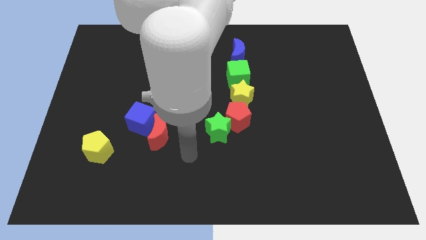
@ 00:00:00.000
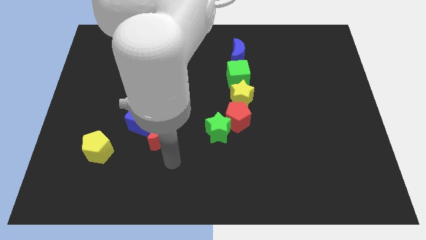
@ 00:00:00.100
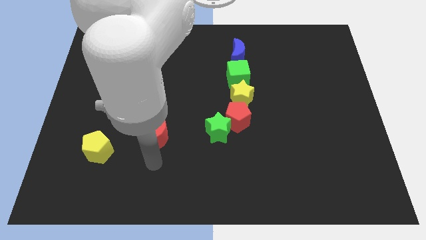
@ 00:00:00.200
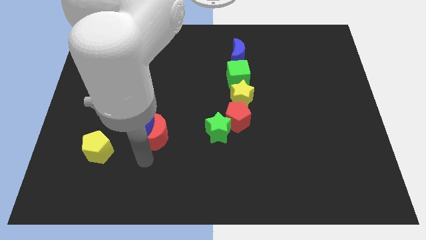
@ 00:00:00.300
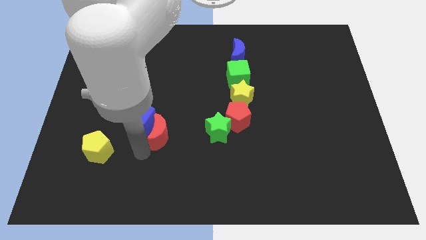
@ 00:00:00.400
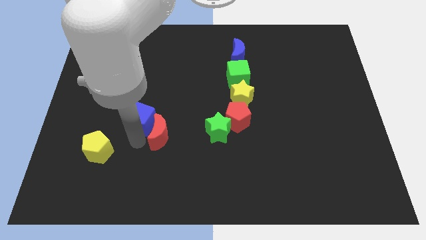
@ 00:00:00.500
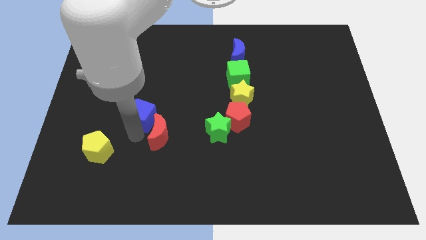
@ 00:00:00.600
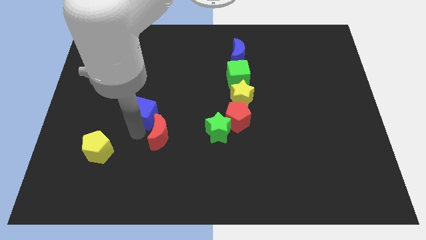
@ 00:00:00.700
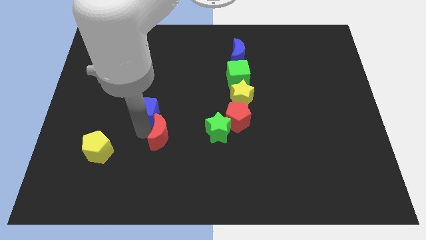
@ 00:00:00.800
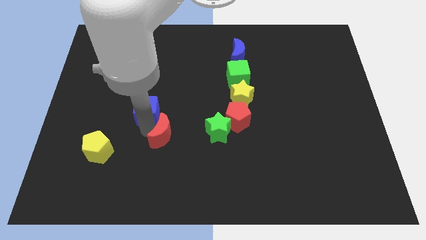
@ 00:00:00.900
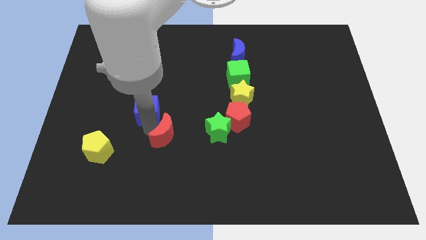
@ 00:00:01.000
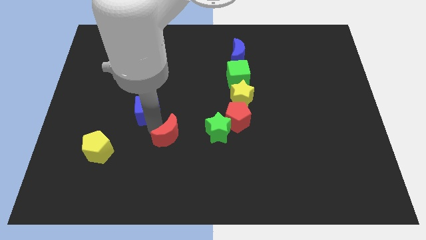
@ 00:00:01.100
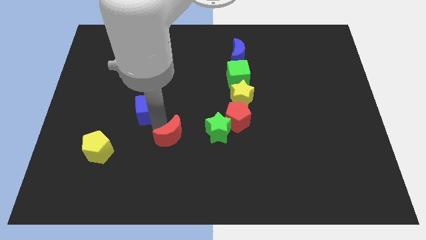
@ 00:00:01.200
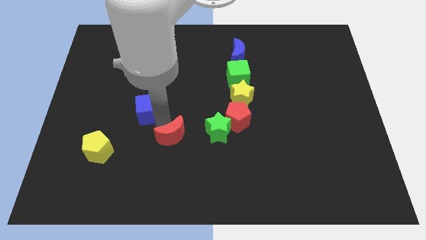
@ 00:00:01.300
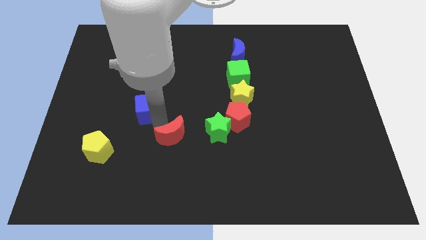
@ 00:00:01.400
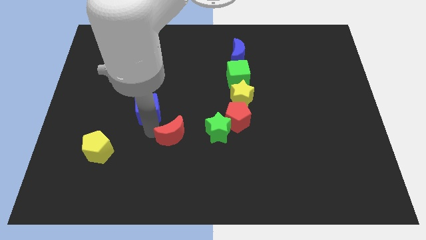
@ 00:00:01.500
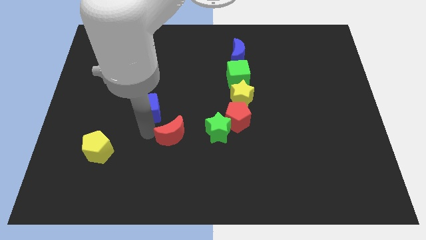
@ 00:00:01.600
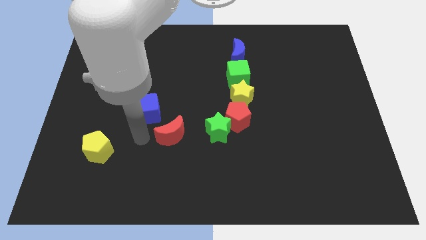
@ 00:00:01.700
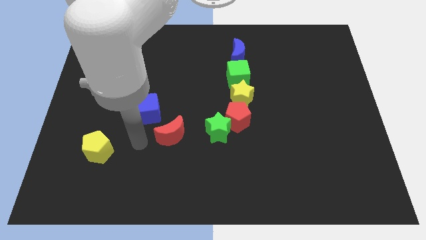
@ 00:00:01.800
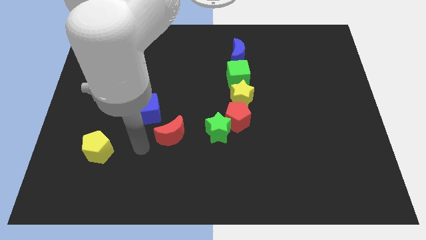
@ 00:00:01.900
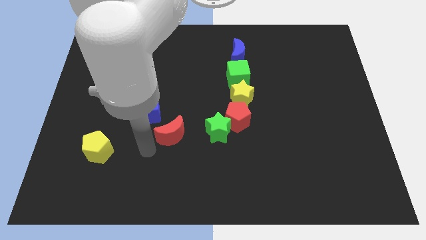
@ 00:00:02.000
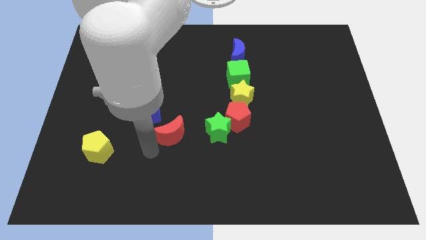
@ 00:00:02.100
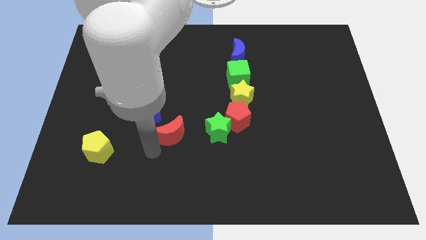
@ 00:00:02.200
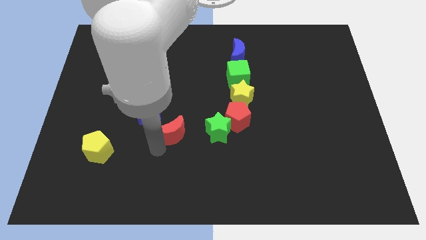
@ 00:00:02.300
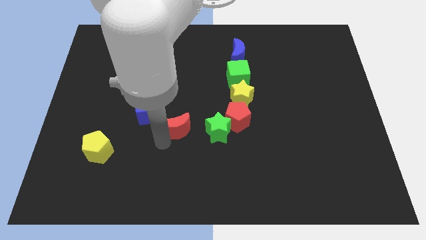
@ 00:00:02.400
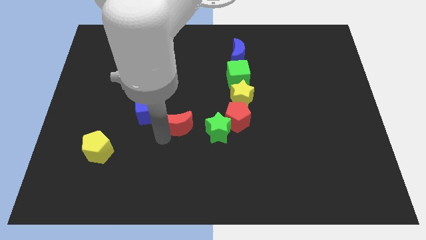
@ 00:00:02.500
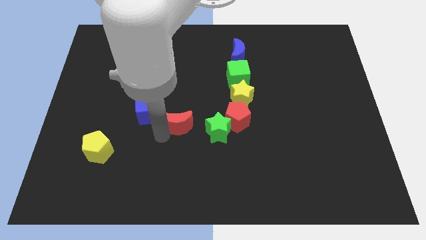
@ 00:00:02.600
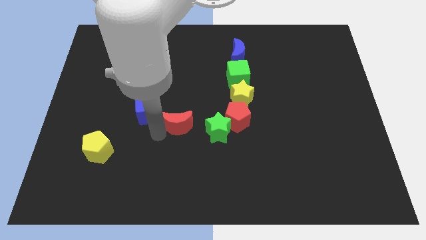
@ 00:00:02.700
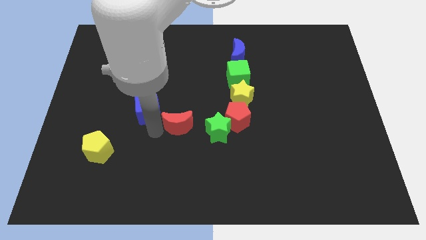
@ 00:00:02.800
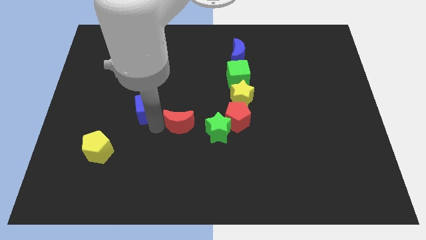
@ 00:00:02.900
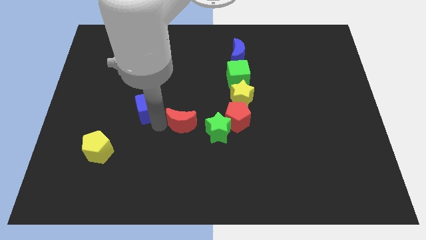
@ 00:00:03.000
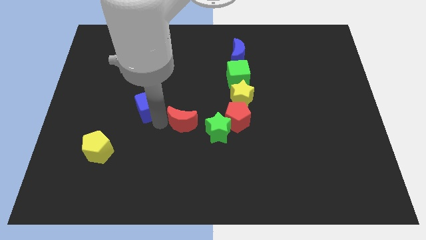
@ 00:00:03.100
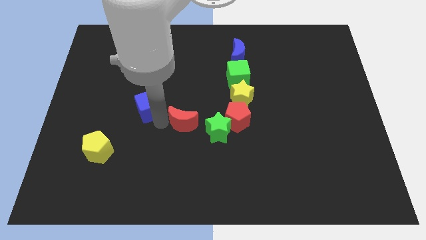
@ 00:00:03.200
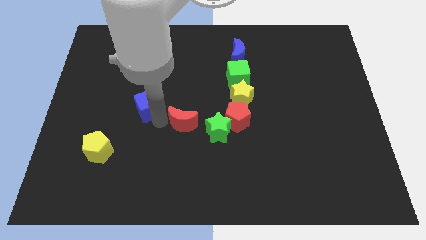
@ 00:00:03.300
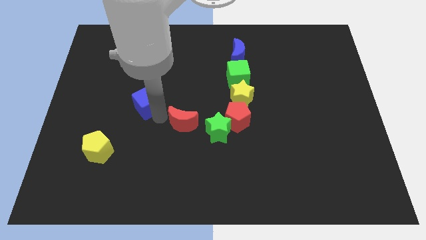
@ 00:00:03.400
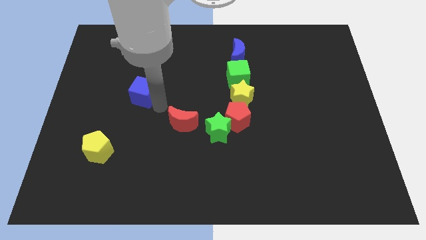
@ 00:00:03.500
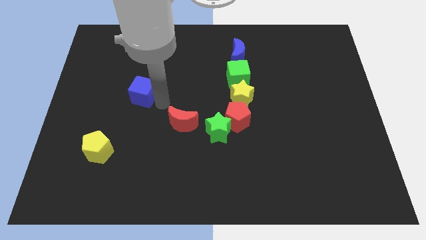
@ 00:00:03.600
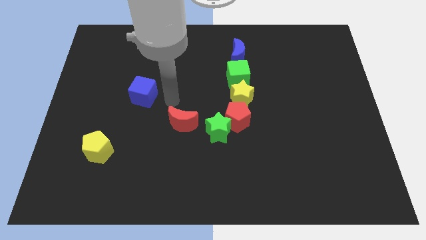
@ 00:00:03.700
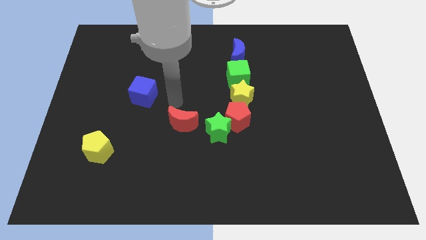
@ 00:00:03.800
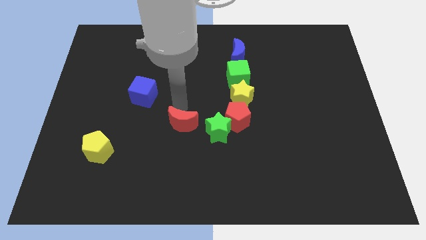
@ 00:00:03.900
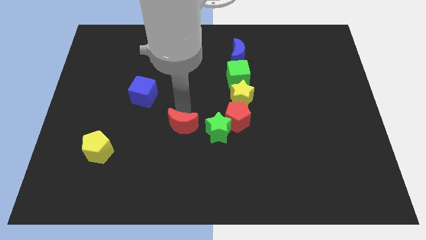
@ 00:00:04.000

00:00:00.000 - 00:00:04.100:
separate the blue cube and red moon

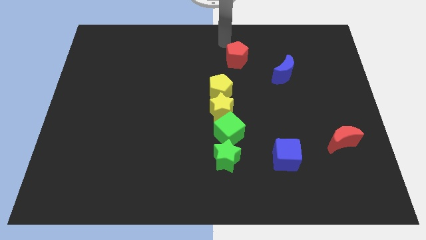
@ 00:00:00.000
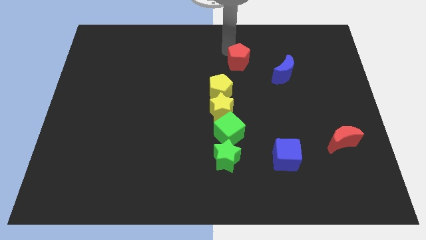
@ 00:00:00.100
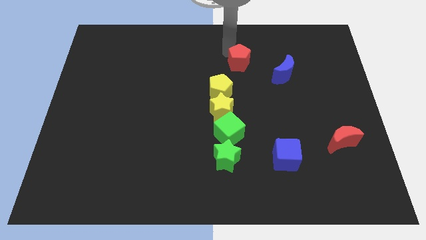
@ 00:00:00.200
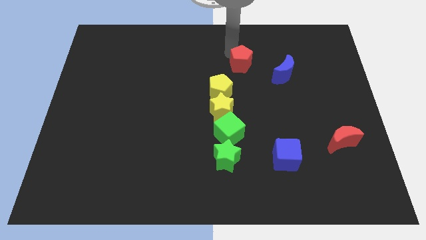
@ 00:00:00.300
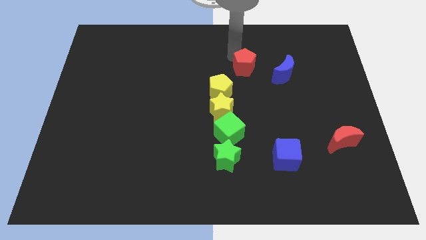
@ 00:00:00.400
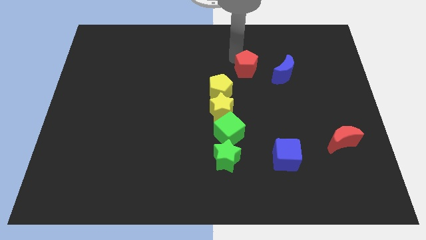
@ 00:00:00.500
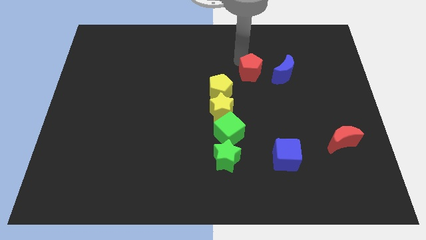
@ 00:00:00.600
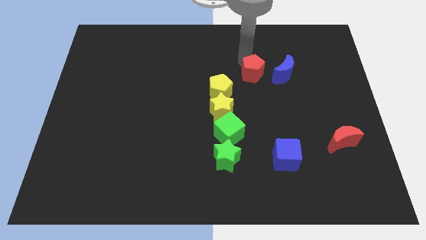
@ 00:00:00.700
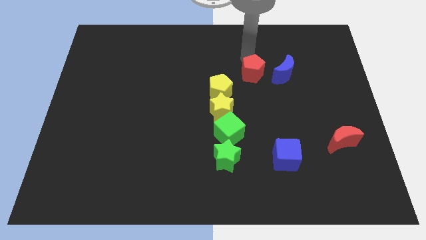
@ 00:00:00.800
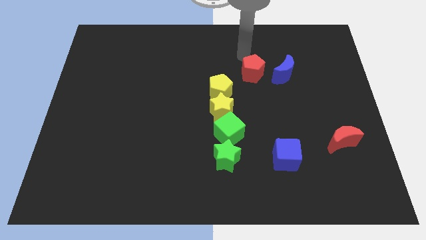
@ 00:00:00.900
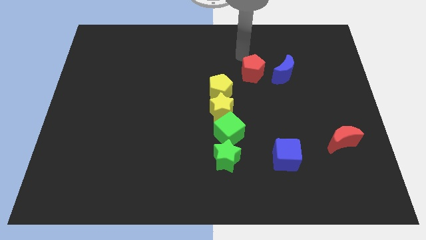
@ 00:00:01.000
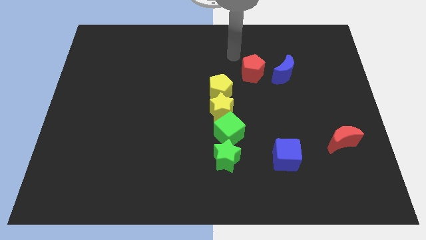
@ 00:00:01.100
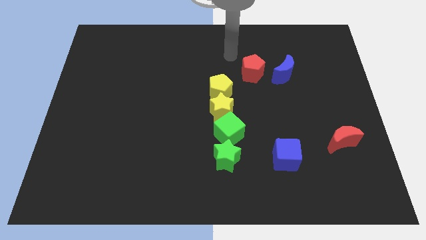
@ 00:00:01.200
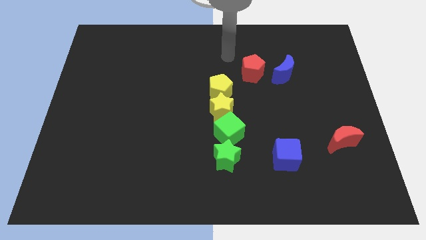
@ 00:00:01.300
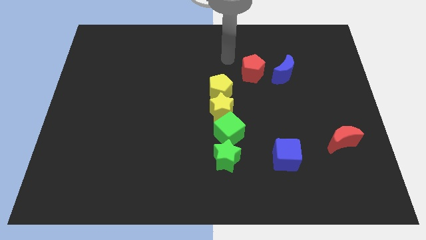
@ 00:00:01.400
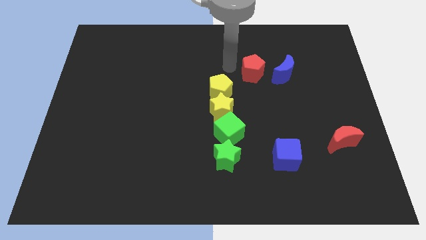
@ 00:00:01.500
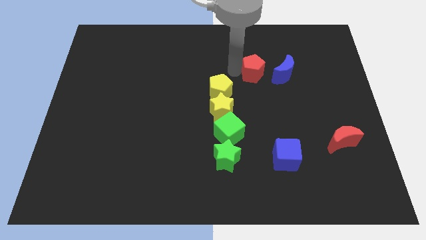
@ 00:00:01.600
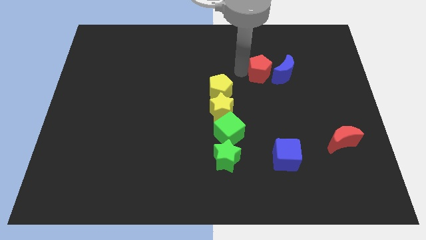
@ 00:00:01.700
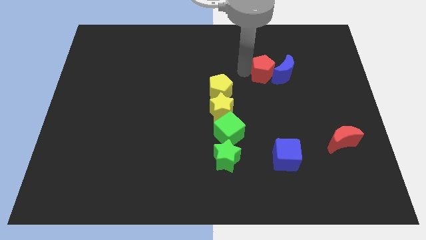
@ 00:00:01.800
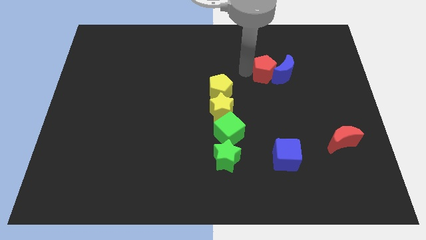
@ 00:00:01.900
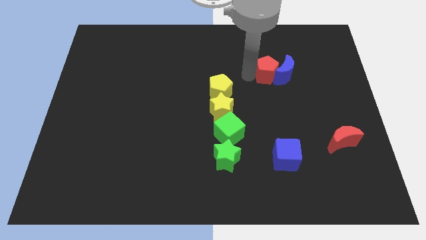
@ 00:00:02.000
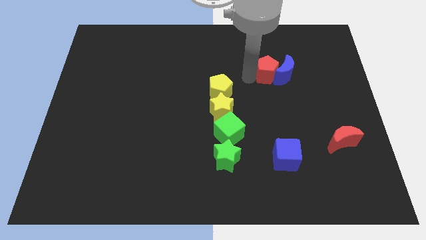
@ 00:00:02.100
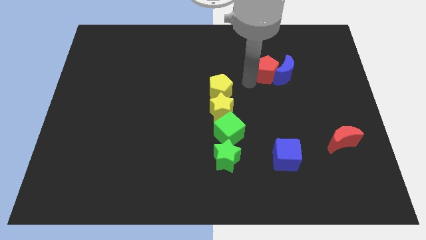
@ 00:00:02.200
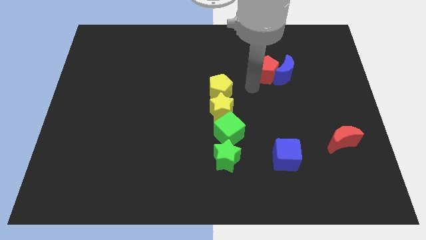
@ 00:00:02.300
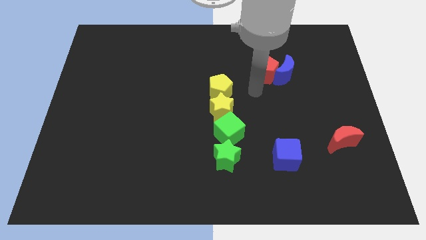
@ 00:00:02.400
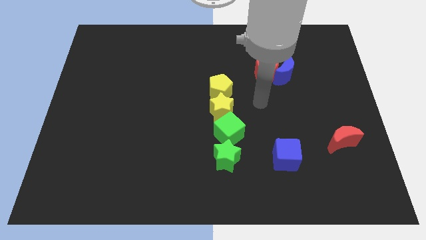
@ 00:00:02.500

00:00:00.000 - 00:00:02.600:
place the red pentagon left to the blue crescent

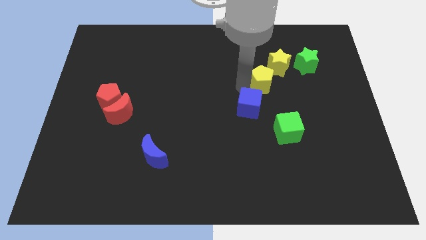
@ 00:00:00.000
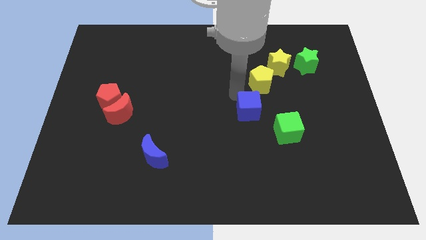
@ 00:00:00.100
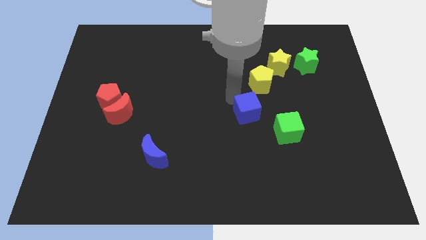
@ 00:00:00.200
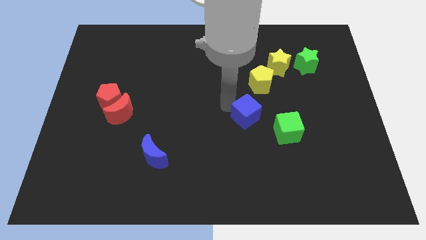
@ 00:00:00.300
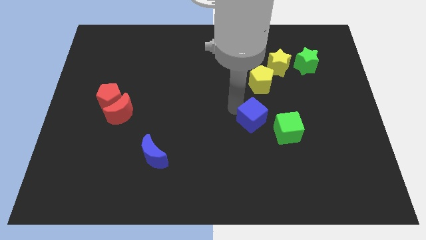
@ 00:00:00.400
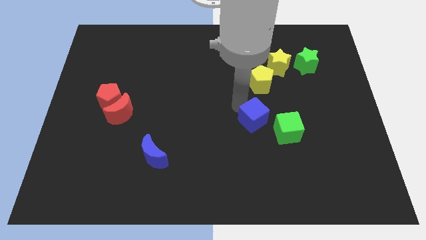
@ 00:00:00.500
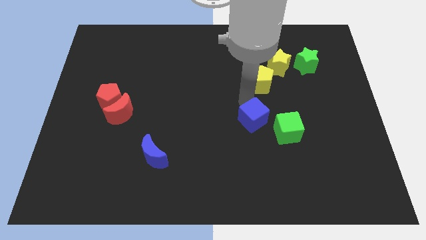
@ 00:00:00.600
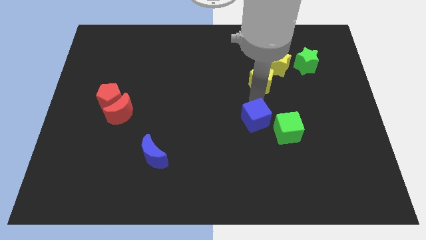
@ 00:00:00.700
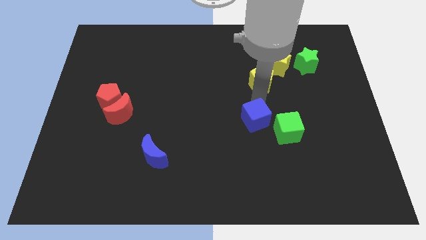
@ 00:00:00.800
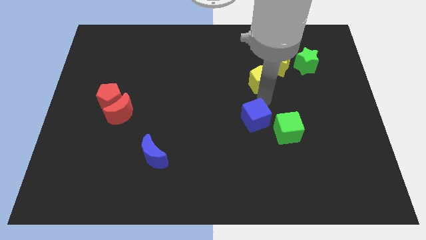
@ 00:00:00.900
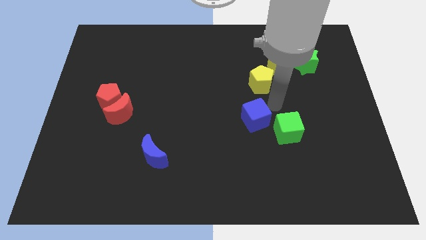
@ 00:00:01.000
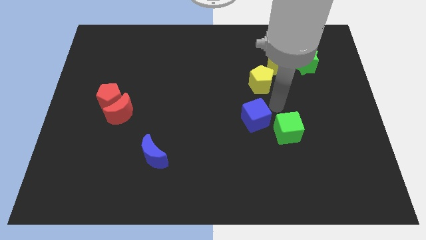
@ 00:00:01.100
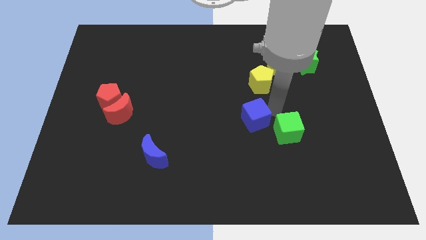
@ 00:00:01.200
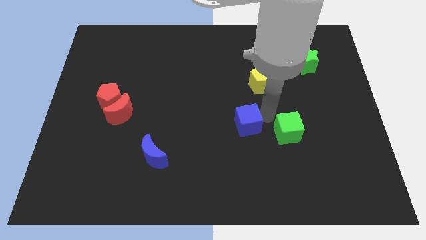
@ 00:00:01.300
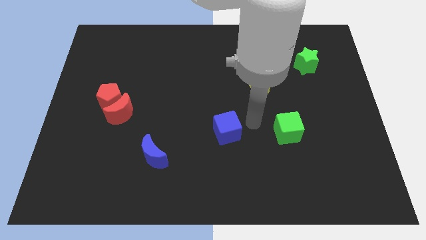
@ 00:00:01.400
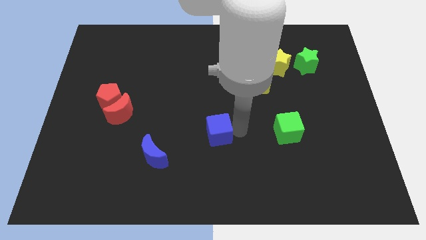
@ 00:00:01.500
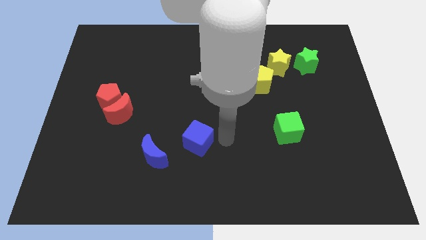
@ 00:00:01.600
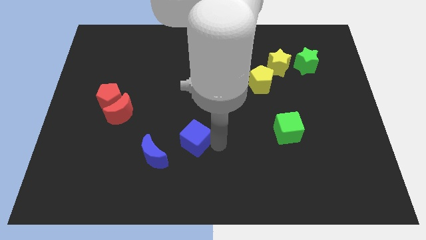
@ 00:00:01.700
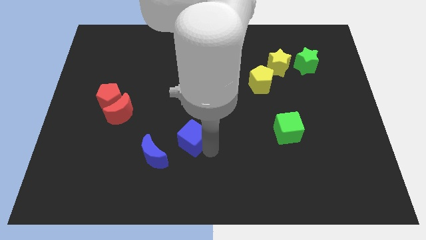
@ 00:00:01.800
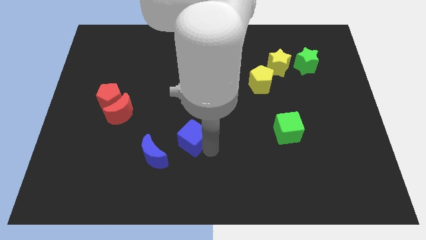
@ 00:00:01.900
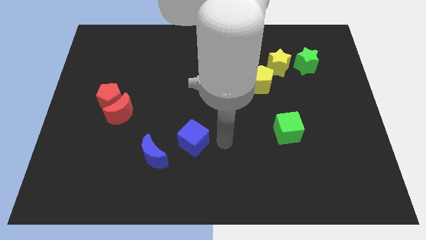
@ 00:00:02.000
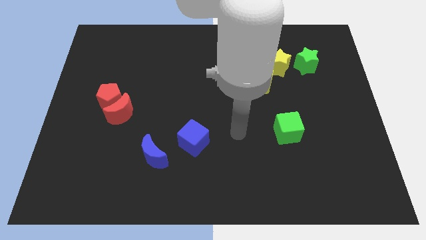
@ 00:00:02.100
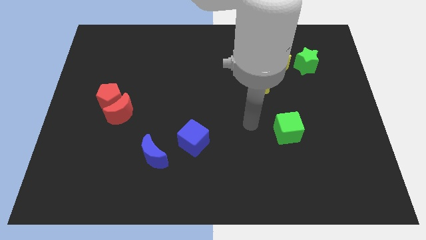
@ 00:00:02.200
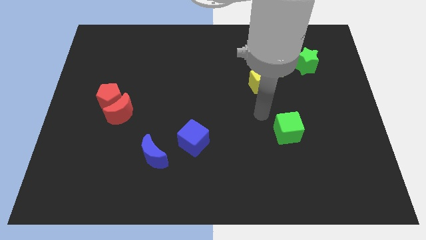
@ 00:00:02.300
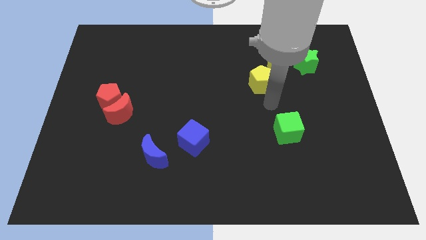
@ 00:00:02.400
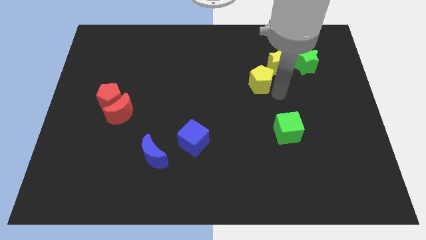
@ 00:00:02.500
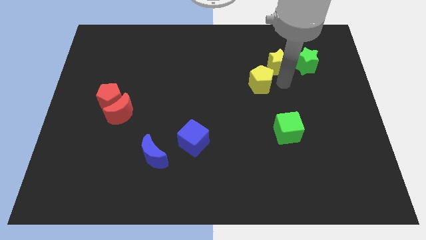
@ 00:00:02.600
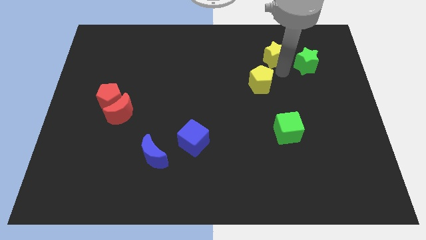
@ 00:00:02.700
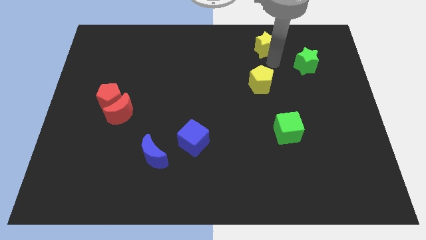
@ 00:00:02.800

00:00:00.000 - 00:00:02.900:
move the blue cube to the top right side of the board
